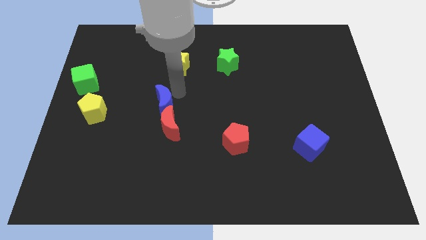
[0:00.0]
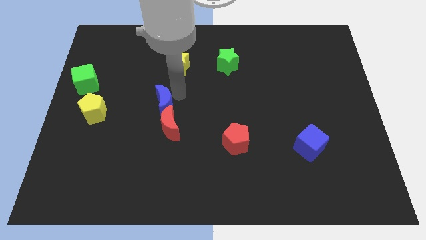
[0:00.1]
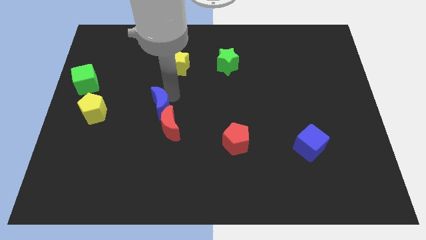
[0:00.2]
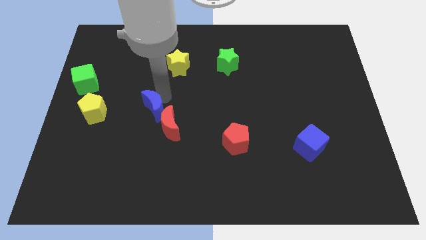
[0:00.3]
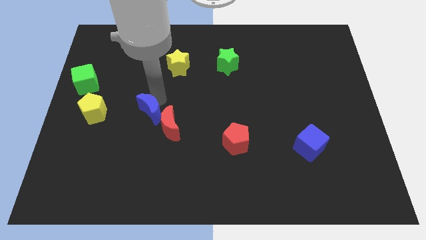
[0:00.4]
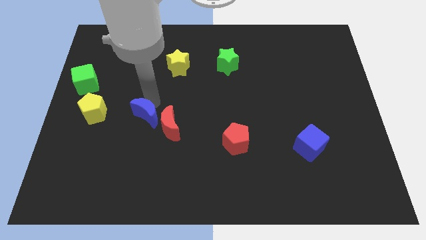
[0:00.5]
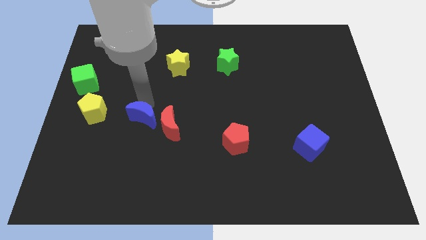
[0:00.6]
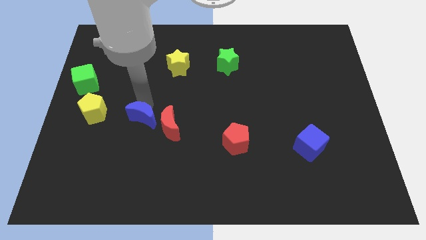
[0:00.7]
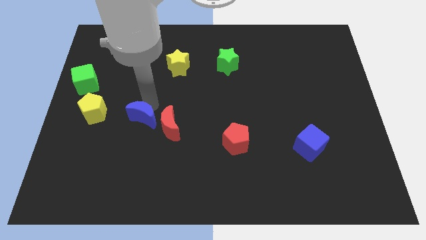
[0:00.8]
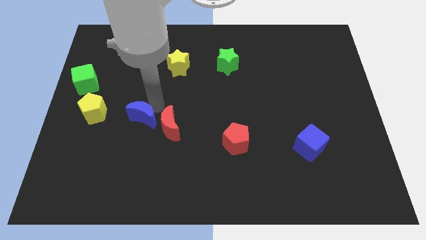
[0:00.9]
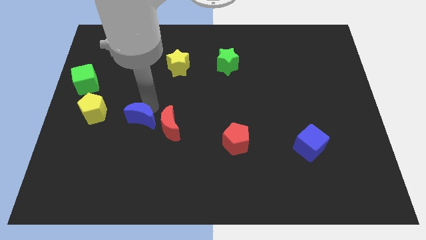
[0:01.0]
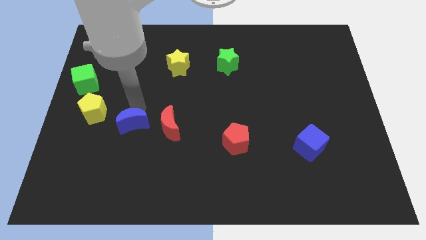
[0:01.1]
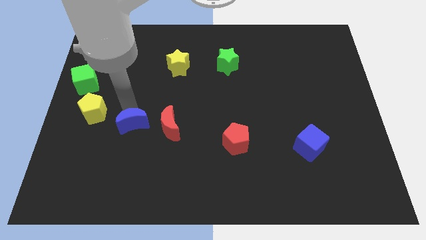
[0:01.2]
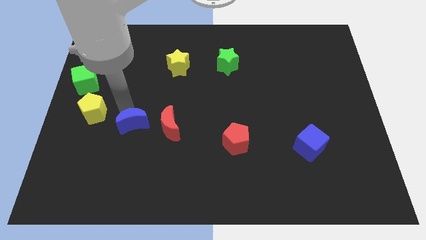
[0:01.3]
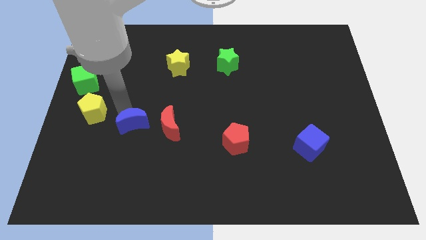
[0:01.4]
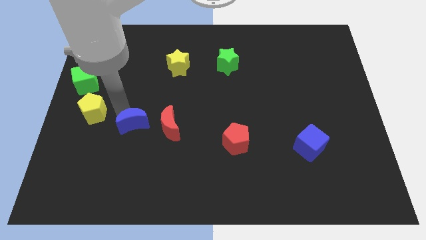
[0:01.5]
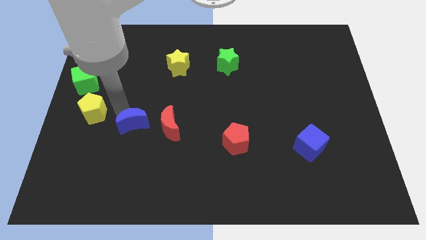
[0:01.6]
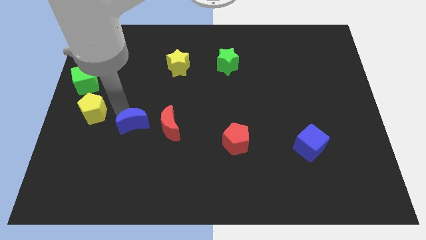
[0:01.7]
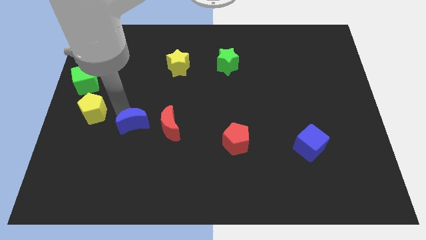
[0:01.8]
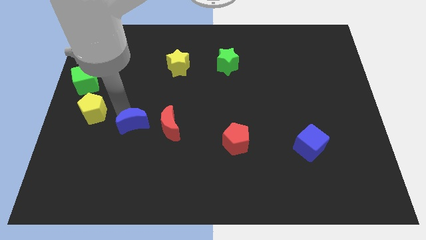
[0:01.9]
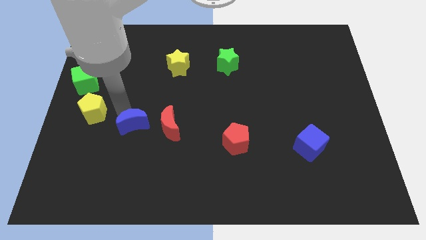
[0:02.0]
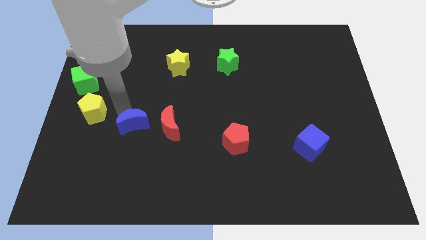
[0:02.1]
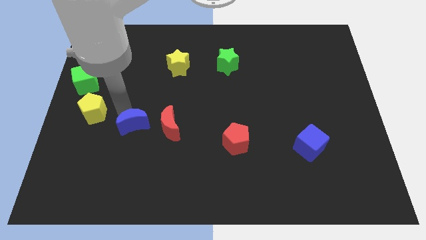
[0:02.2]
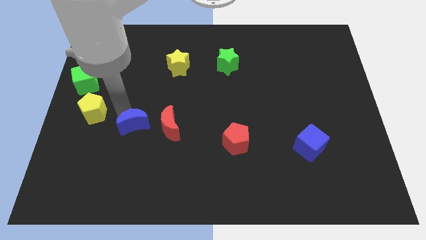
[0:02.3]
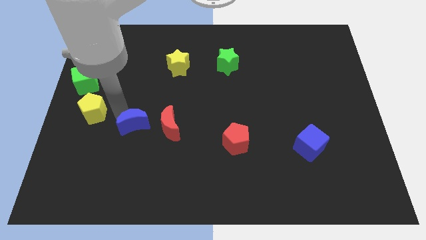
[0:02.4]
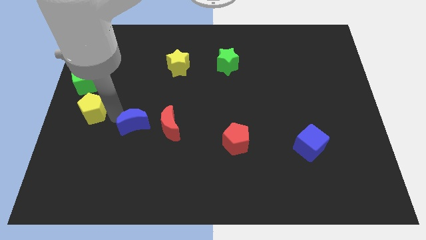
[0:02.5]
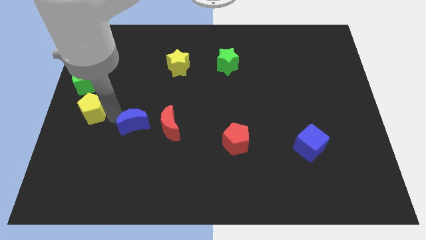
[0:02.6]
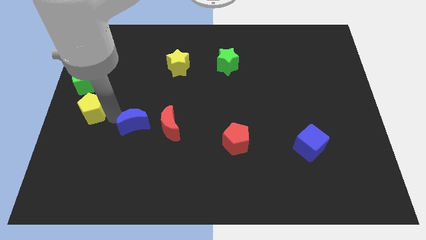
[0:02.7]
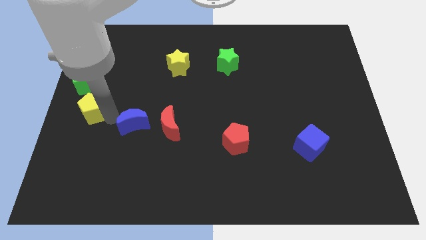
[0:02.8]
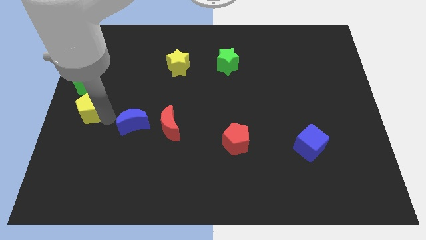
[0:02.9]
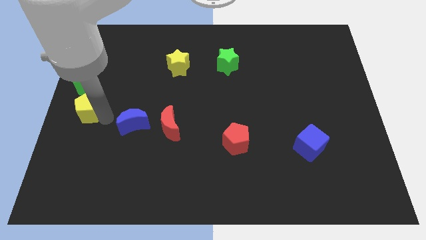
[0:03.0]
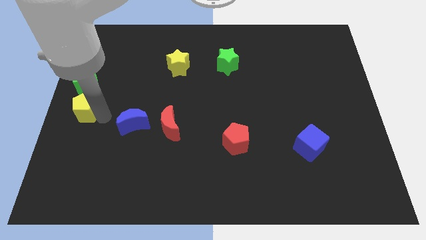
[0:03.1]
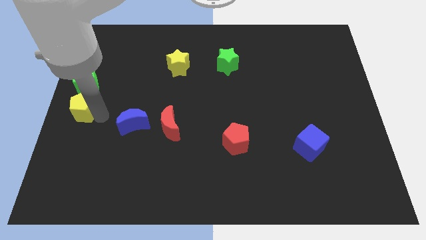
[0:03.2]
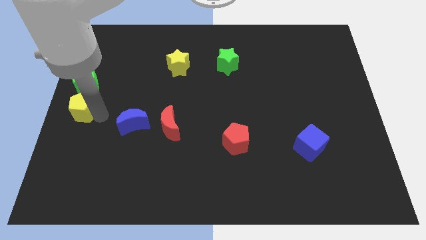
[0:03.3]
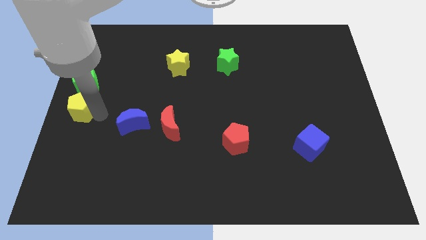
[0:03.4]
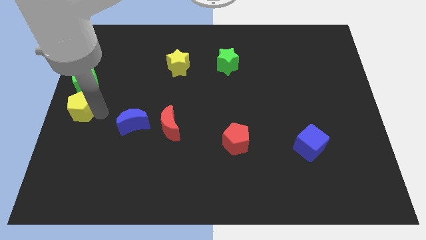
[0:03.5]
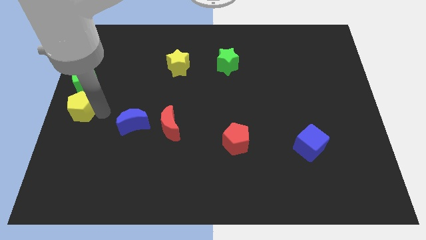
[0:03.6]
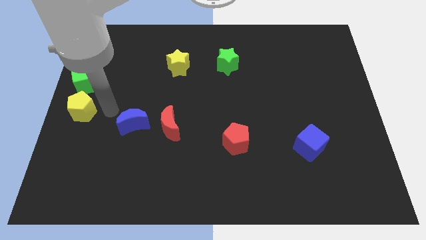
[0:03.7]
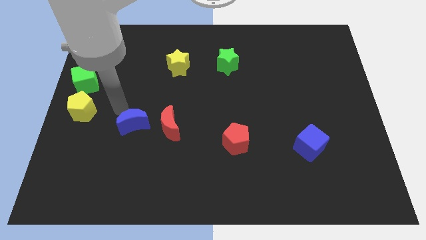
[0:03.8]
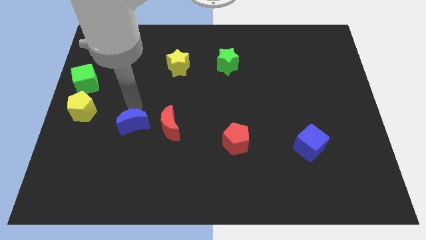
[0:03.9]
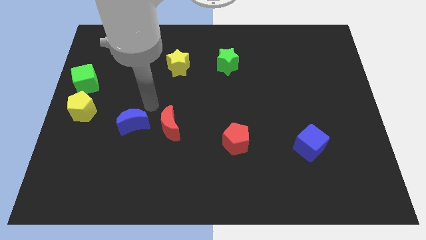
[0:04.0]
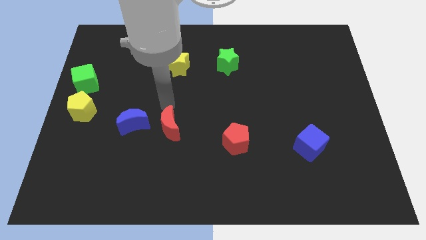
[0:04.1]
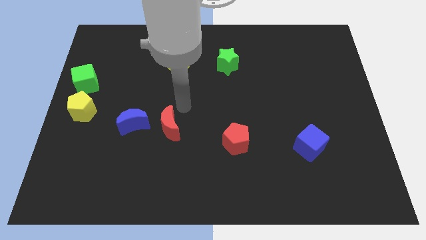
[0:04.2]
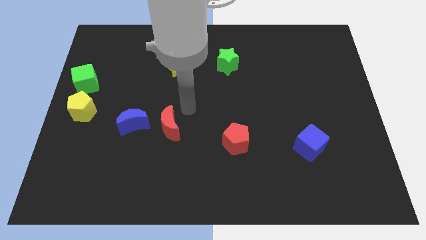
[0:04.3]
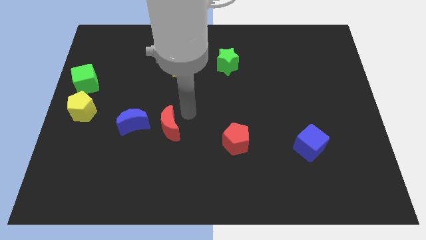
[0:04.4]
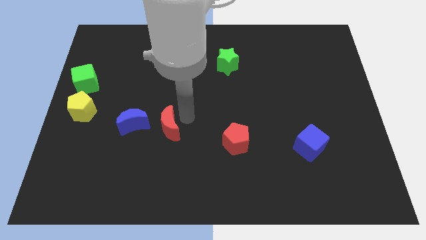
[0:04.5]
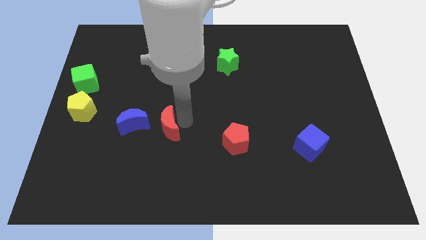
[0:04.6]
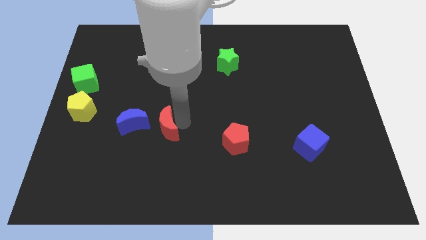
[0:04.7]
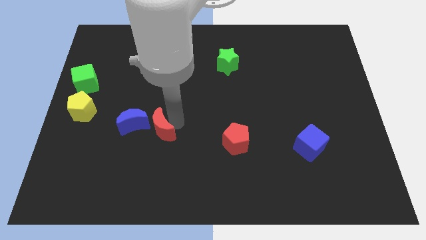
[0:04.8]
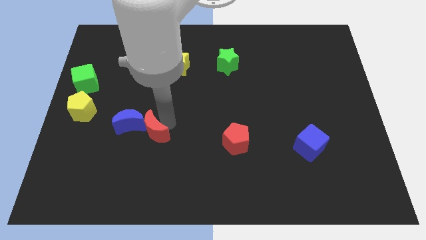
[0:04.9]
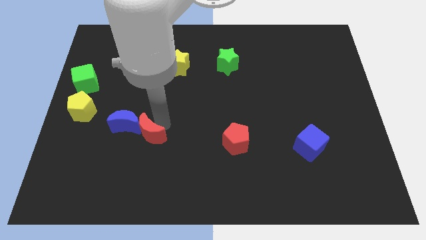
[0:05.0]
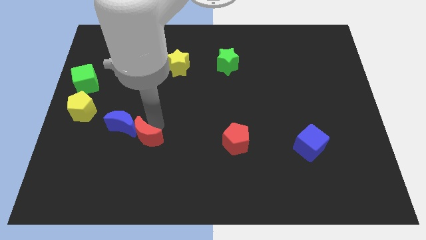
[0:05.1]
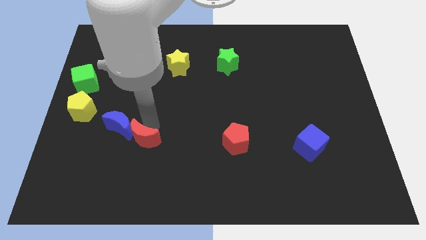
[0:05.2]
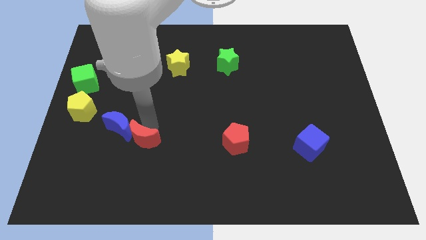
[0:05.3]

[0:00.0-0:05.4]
push the red crescent to touch the right side of the blue moon

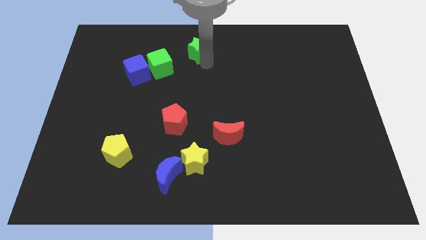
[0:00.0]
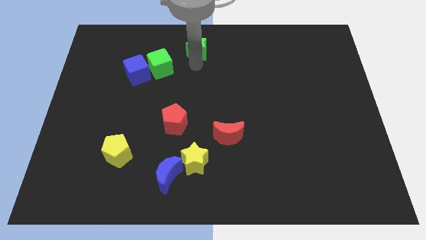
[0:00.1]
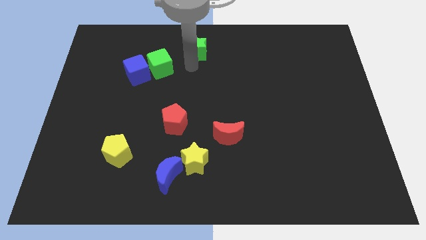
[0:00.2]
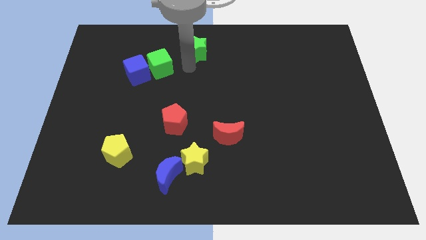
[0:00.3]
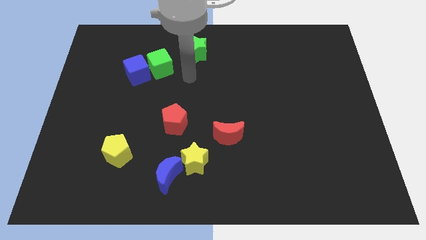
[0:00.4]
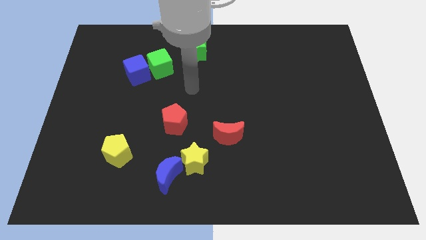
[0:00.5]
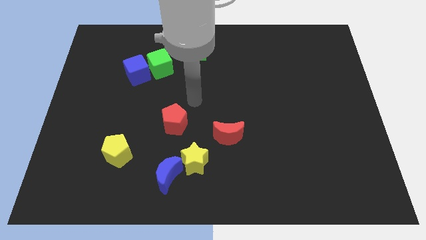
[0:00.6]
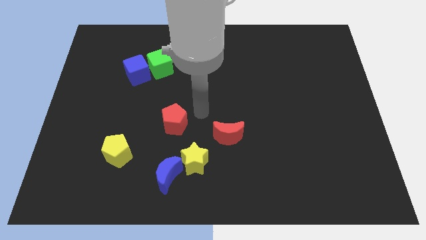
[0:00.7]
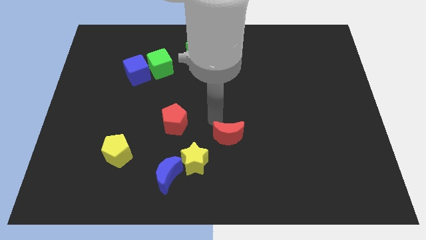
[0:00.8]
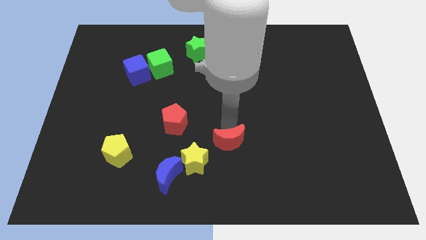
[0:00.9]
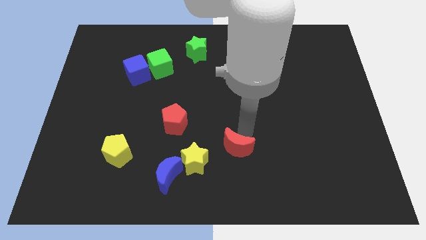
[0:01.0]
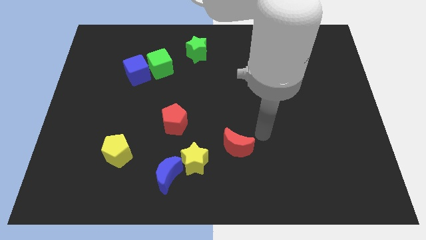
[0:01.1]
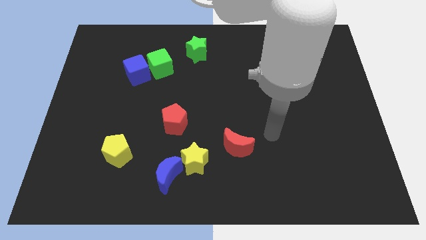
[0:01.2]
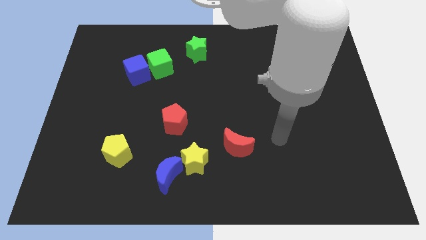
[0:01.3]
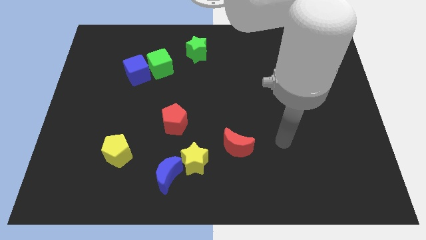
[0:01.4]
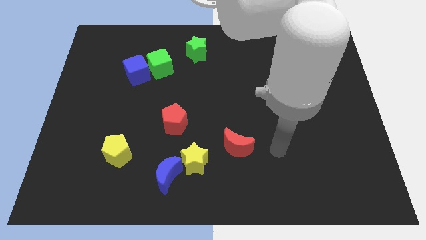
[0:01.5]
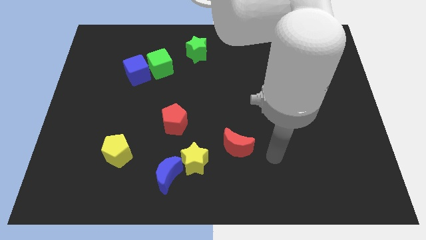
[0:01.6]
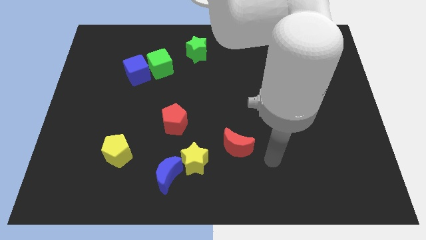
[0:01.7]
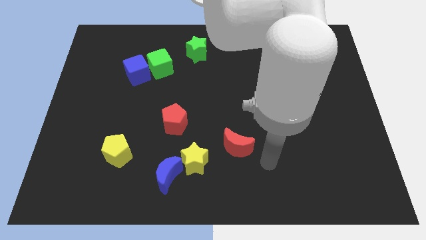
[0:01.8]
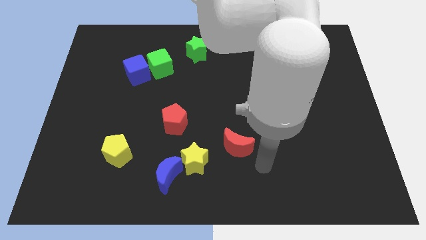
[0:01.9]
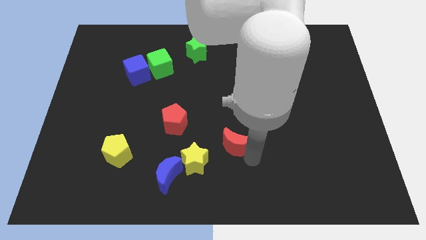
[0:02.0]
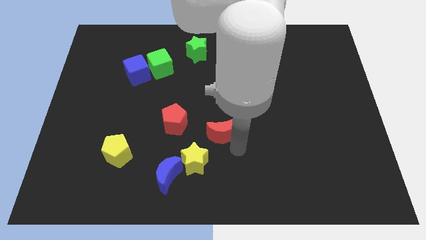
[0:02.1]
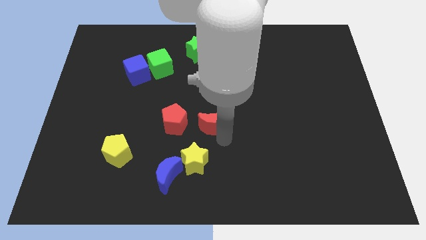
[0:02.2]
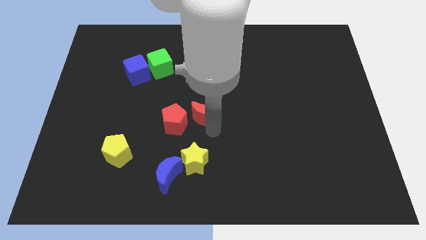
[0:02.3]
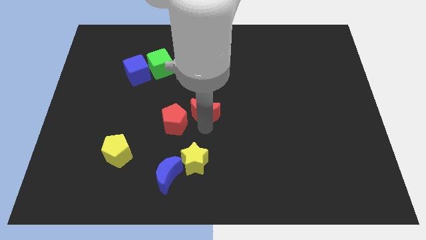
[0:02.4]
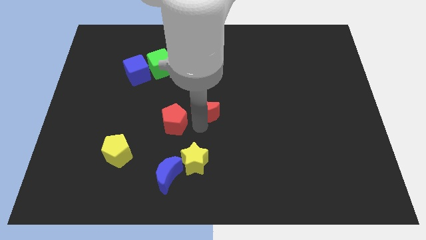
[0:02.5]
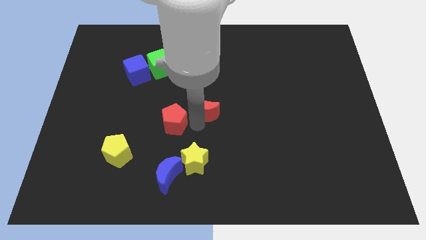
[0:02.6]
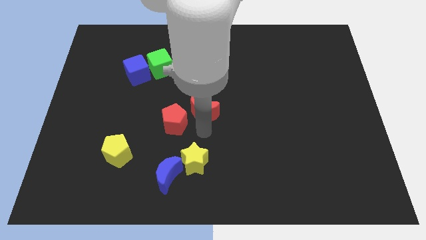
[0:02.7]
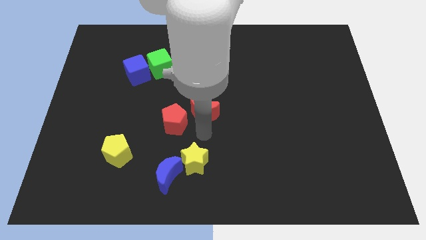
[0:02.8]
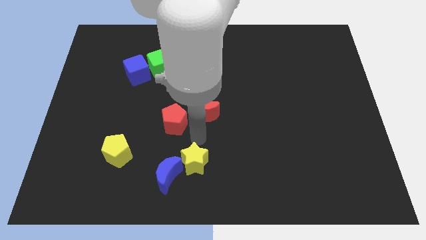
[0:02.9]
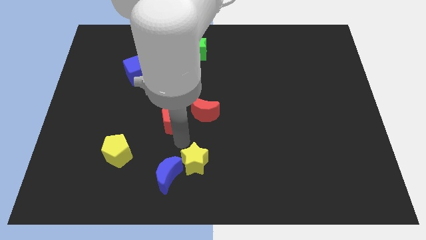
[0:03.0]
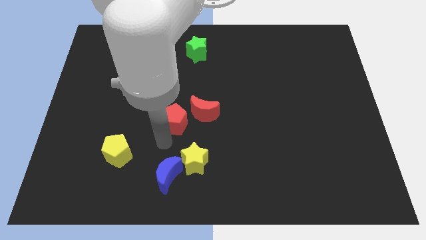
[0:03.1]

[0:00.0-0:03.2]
push the red moon towards the green star

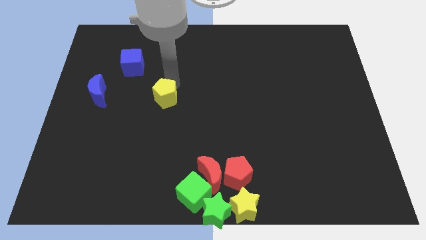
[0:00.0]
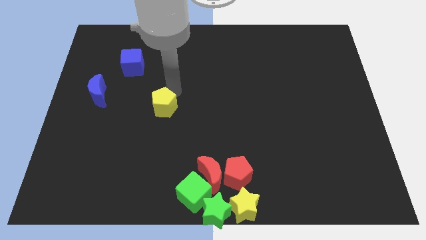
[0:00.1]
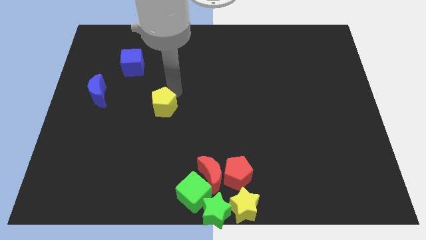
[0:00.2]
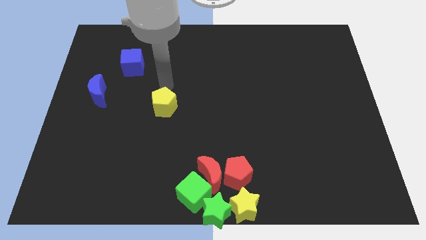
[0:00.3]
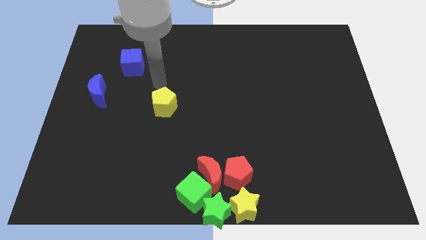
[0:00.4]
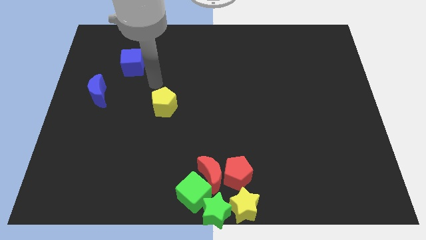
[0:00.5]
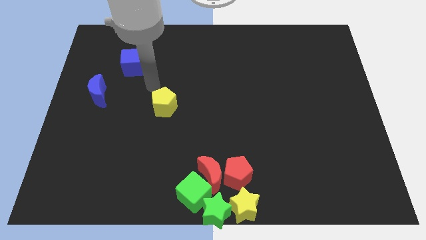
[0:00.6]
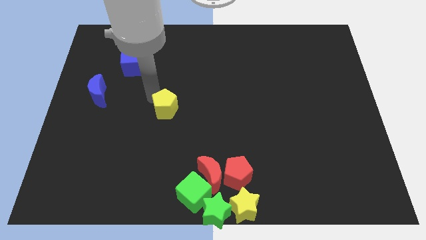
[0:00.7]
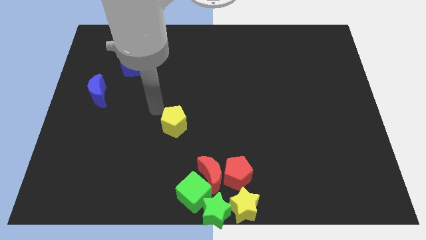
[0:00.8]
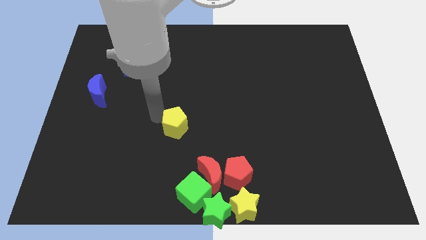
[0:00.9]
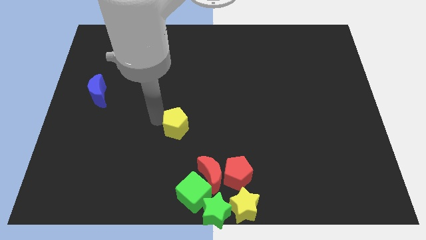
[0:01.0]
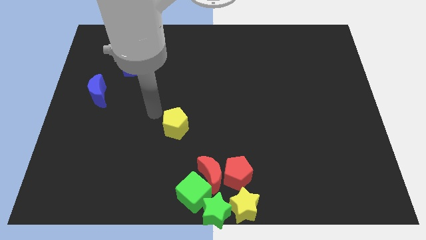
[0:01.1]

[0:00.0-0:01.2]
place the yellow pentagon diagonally top left to the red moon
